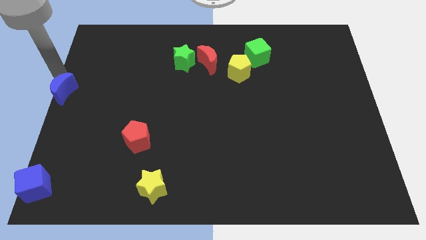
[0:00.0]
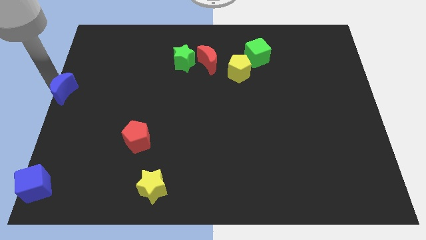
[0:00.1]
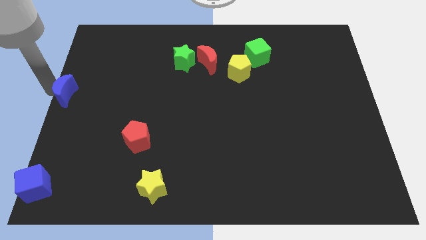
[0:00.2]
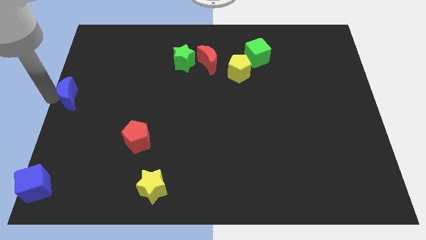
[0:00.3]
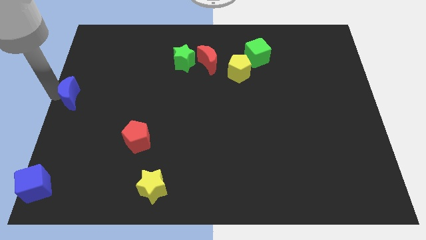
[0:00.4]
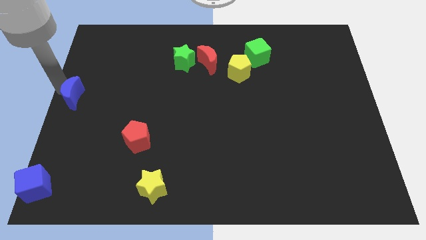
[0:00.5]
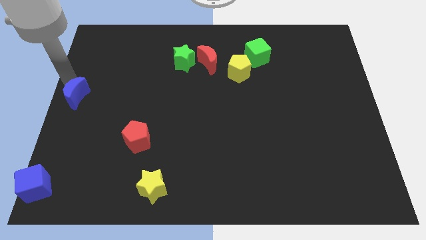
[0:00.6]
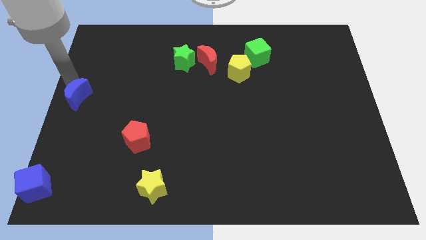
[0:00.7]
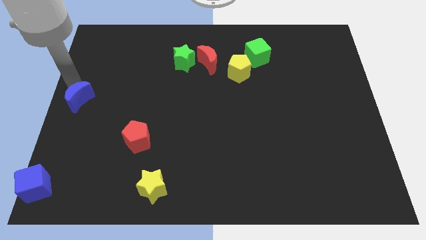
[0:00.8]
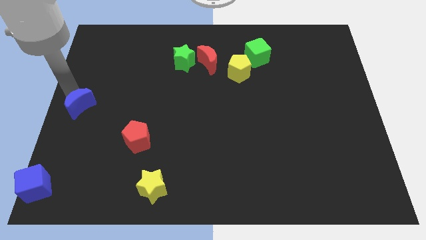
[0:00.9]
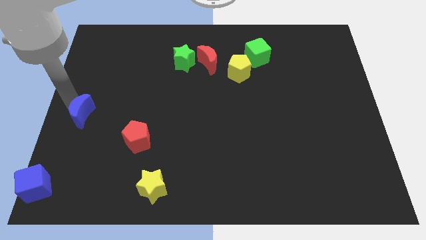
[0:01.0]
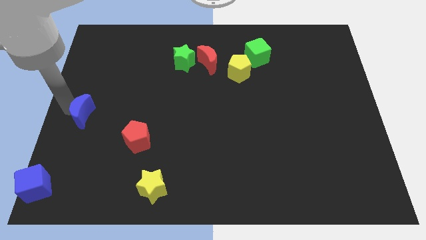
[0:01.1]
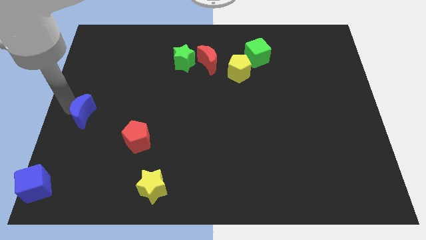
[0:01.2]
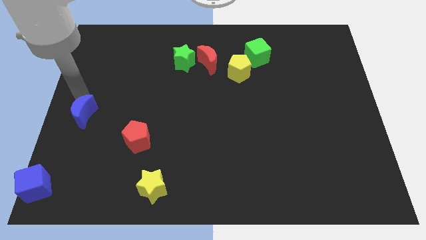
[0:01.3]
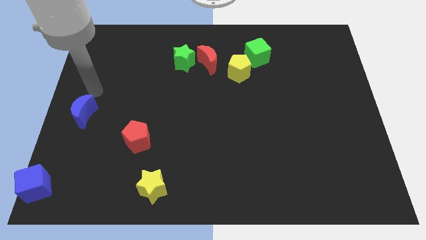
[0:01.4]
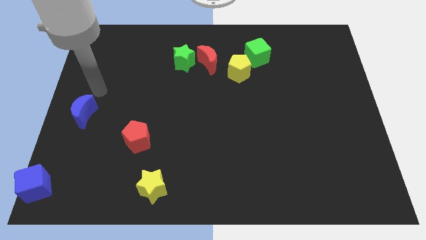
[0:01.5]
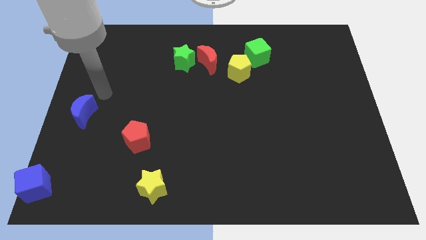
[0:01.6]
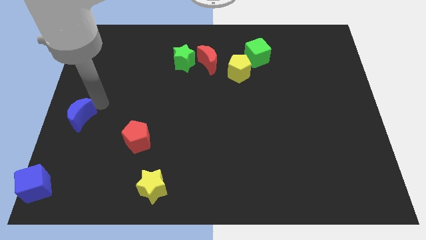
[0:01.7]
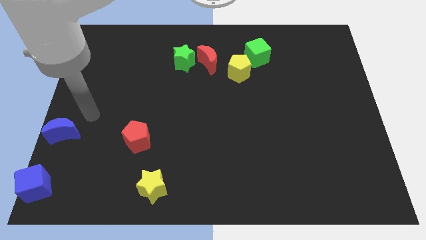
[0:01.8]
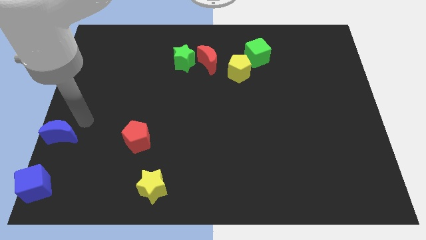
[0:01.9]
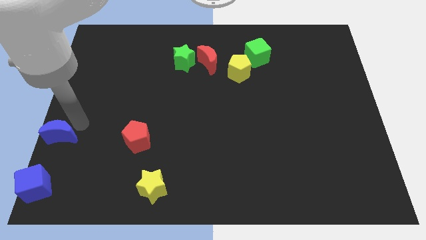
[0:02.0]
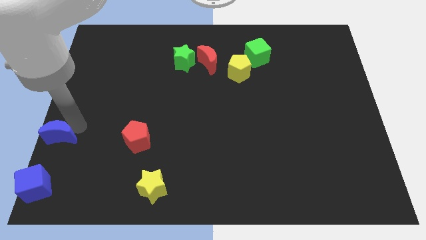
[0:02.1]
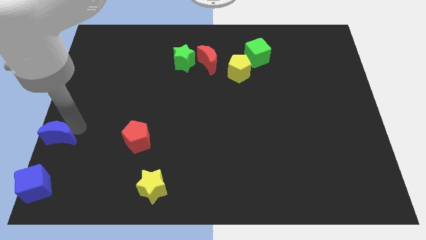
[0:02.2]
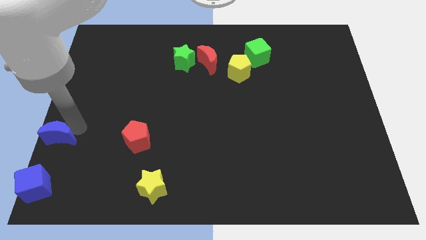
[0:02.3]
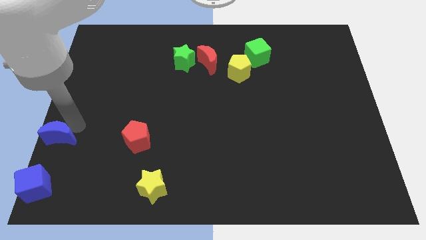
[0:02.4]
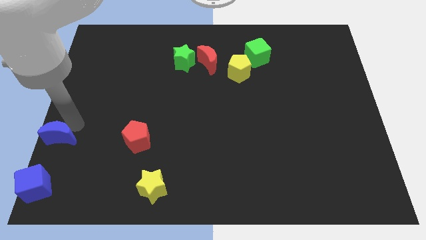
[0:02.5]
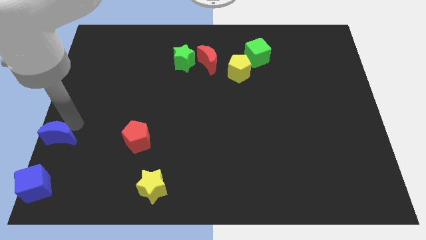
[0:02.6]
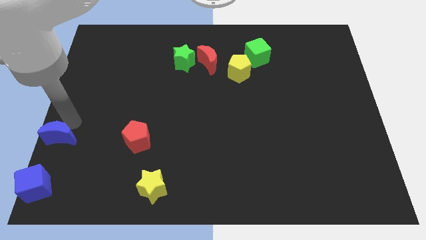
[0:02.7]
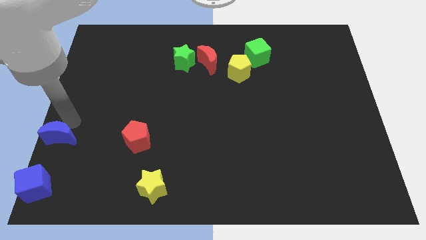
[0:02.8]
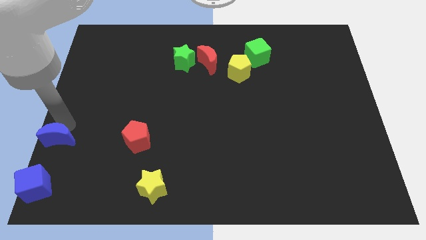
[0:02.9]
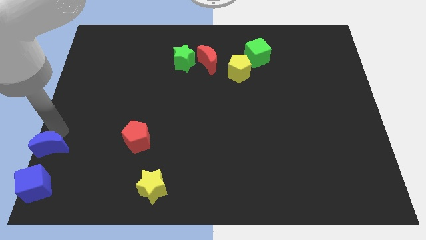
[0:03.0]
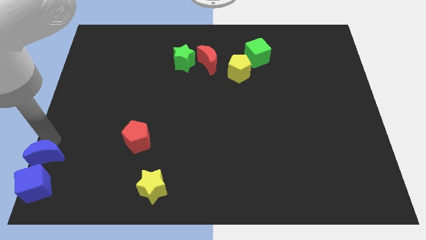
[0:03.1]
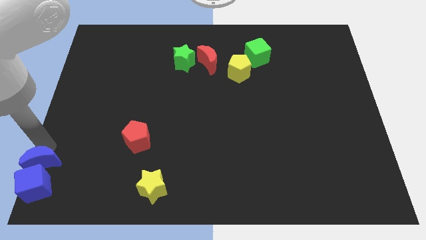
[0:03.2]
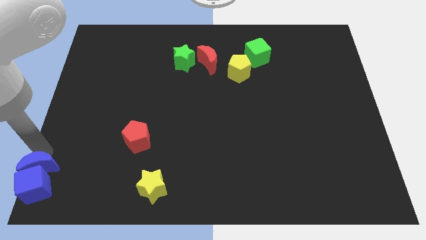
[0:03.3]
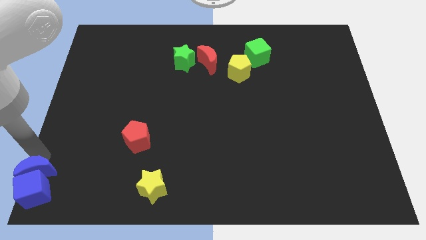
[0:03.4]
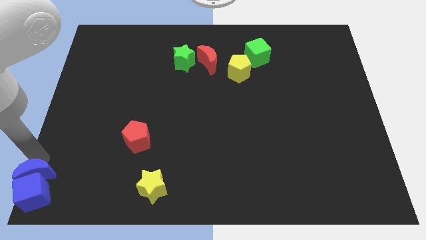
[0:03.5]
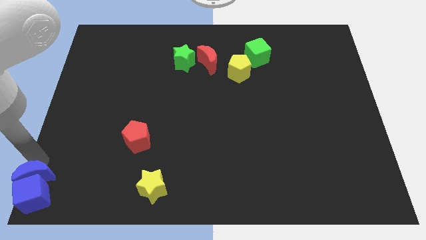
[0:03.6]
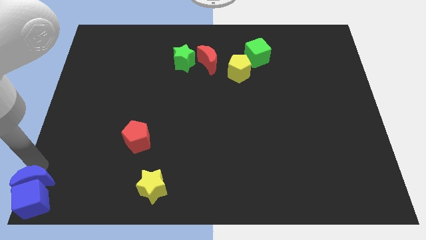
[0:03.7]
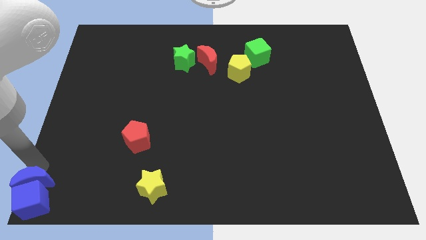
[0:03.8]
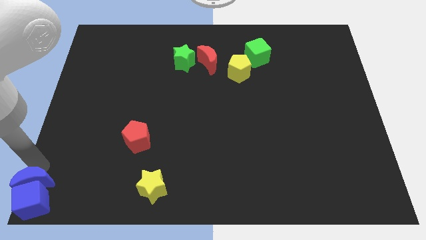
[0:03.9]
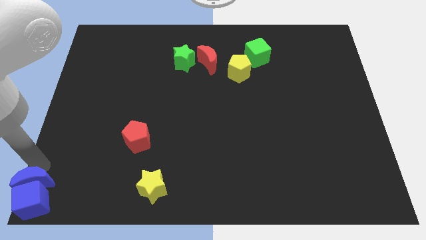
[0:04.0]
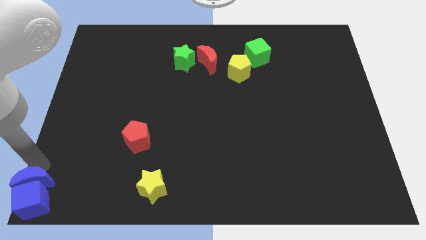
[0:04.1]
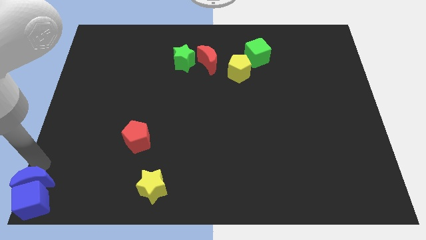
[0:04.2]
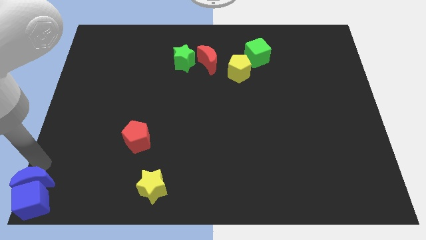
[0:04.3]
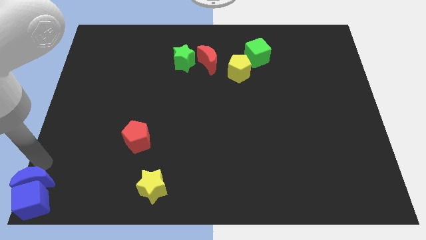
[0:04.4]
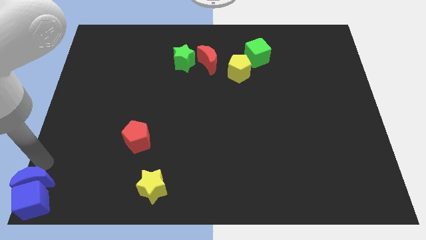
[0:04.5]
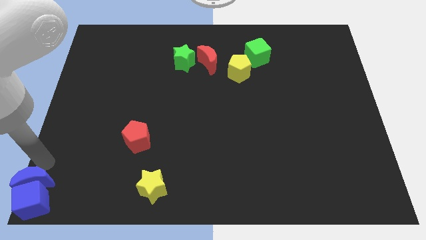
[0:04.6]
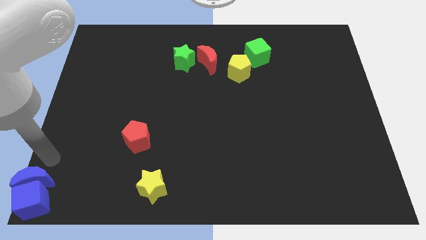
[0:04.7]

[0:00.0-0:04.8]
push the blue crescent into the blue cube

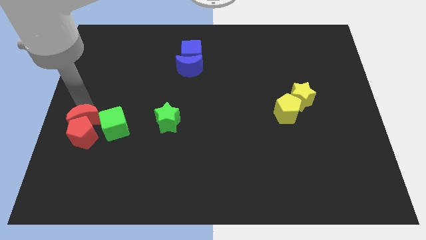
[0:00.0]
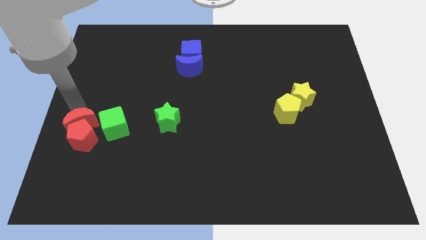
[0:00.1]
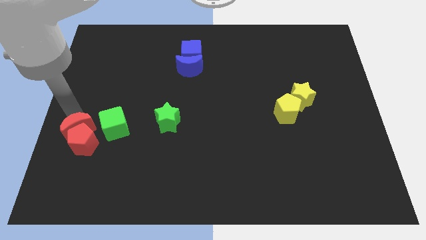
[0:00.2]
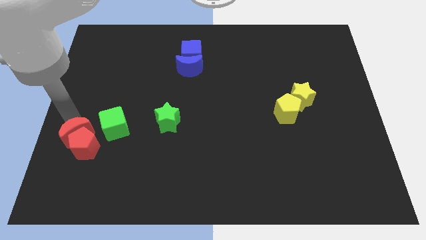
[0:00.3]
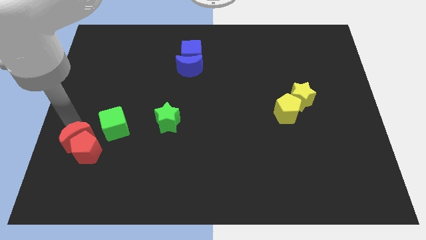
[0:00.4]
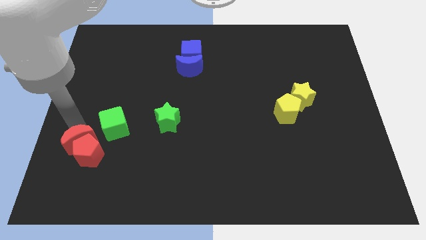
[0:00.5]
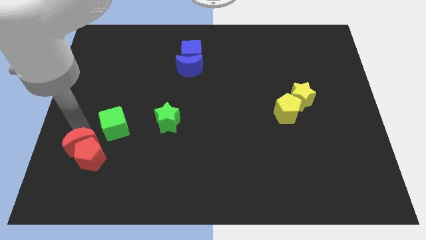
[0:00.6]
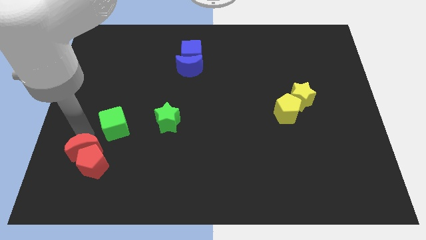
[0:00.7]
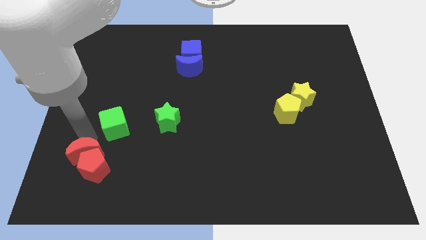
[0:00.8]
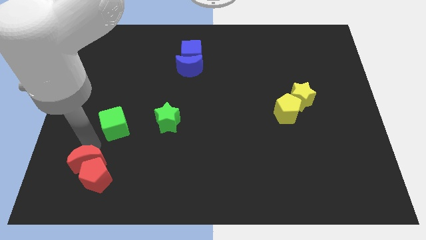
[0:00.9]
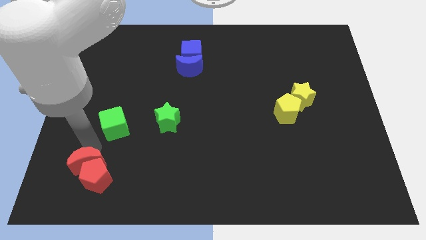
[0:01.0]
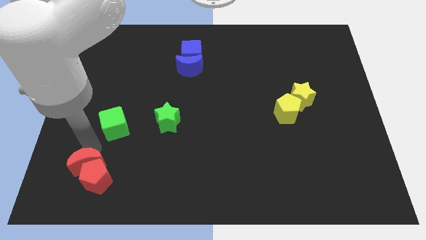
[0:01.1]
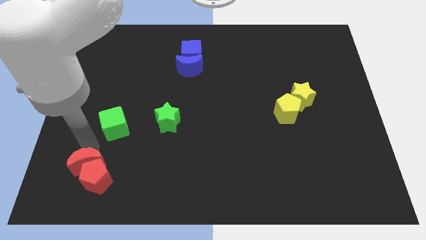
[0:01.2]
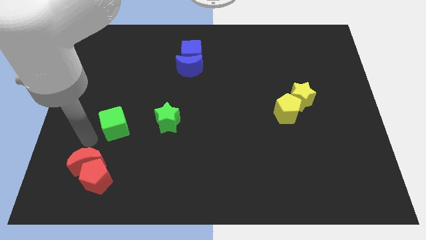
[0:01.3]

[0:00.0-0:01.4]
move red blocks slightly to the bottom of the board

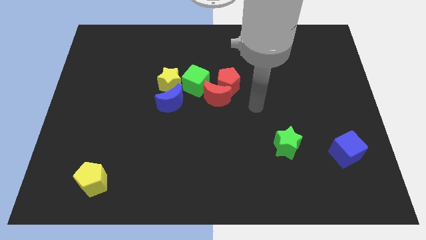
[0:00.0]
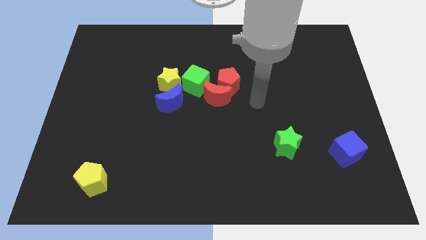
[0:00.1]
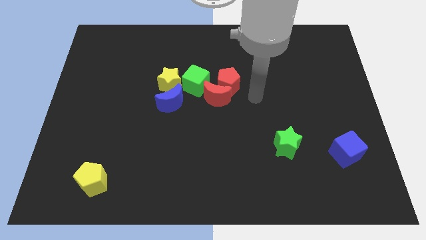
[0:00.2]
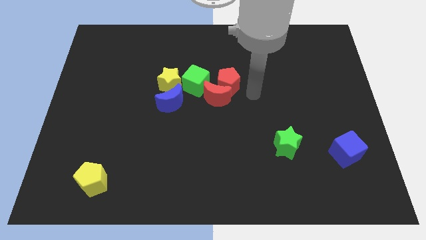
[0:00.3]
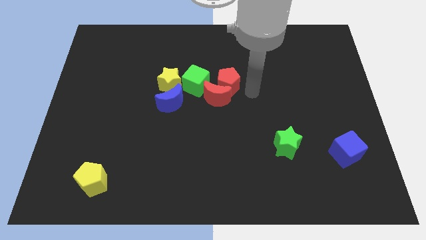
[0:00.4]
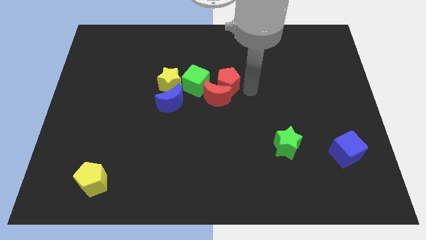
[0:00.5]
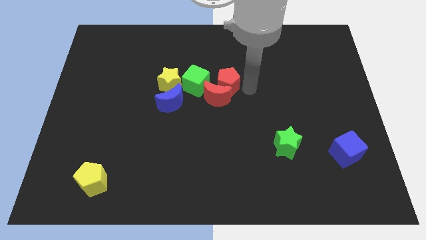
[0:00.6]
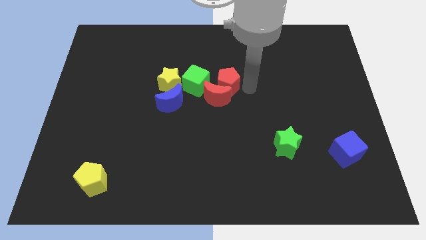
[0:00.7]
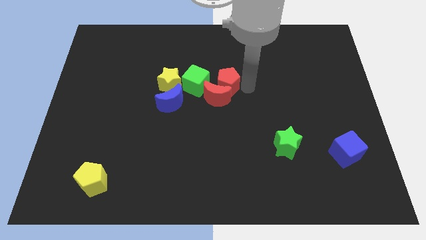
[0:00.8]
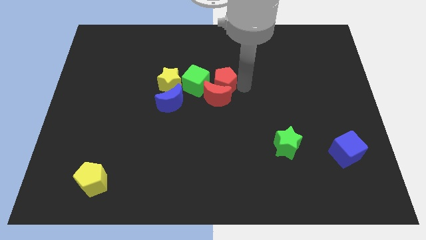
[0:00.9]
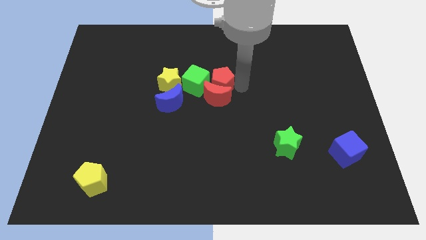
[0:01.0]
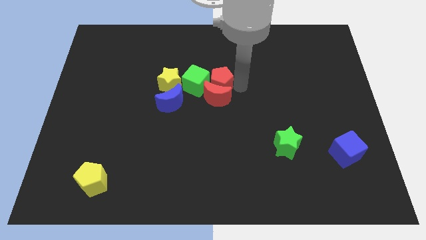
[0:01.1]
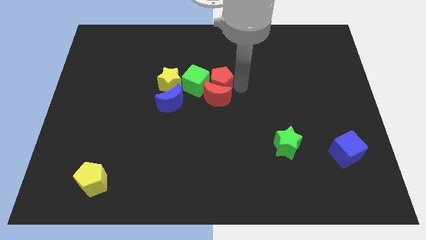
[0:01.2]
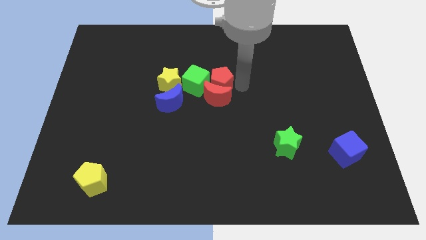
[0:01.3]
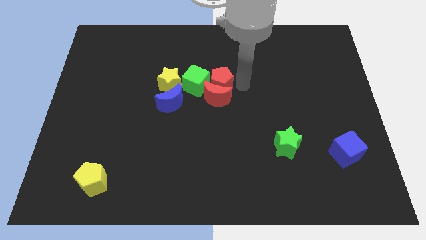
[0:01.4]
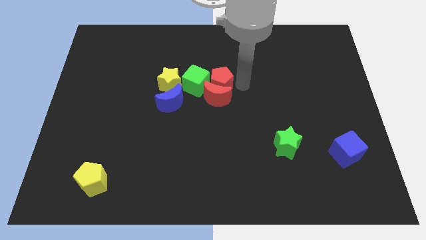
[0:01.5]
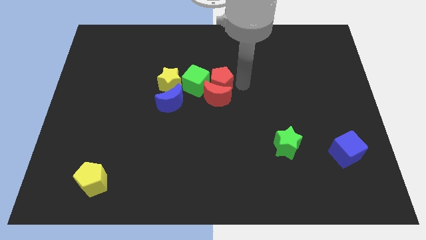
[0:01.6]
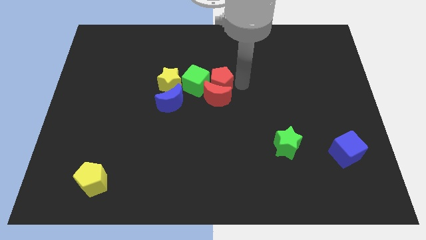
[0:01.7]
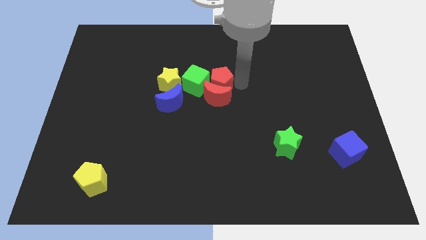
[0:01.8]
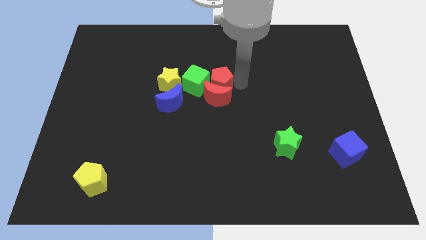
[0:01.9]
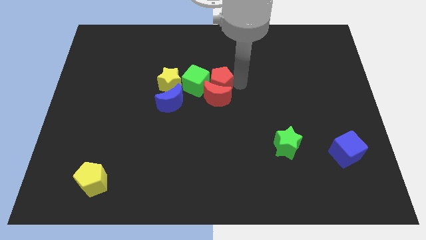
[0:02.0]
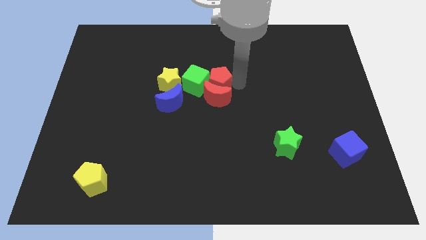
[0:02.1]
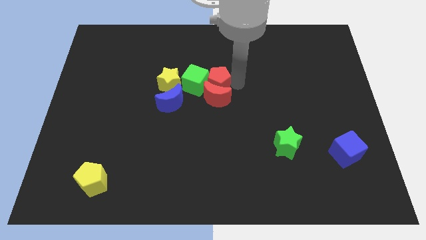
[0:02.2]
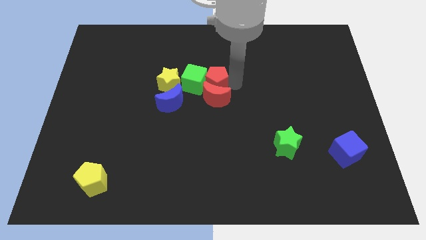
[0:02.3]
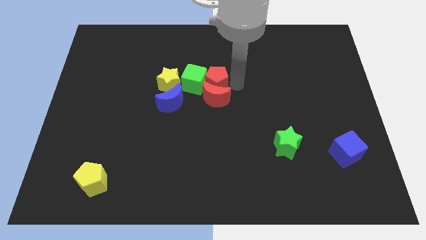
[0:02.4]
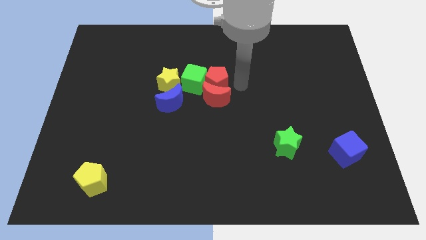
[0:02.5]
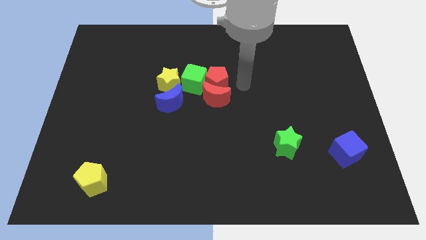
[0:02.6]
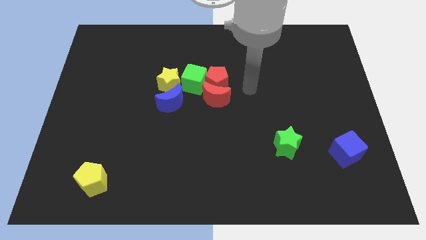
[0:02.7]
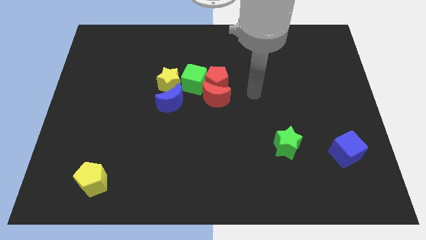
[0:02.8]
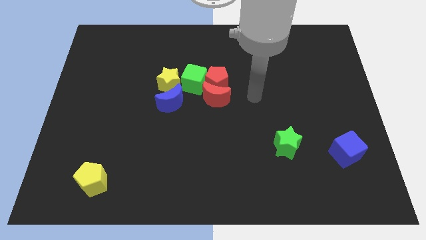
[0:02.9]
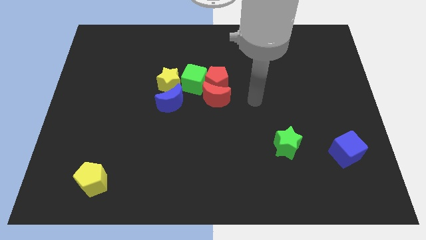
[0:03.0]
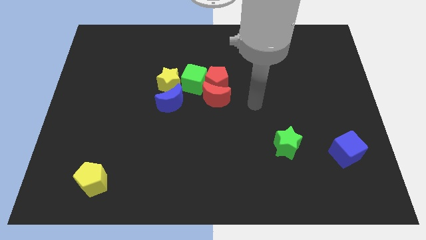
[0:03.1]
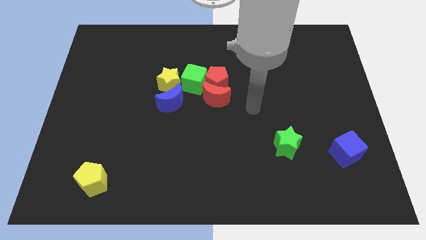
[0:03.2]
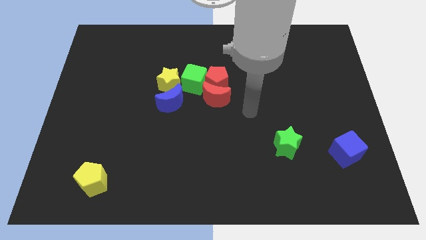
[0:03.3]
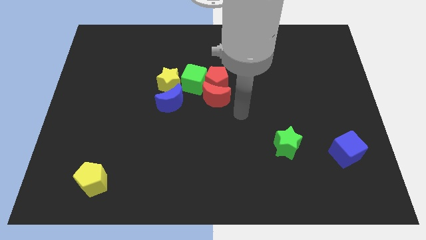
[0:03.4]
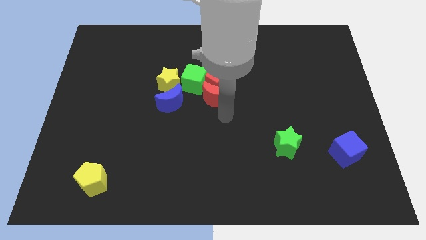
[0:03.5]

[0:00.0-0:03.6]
slightly push the red pentagon into the green cube
